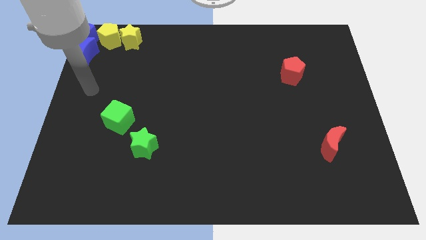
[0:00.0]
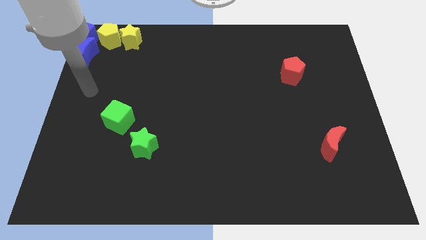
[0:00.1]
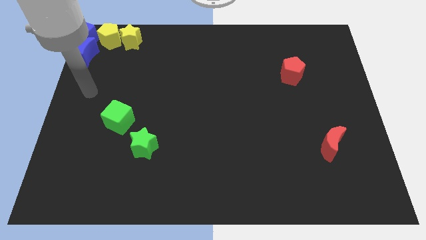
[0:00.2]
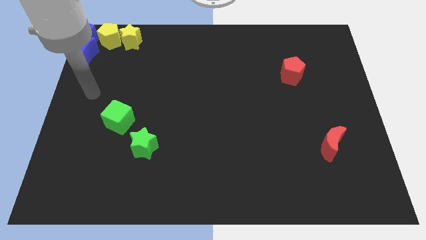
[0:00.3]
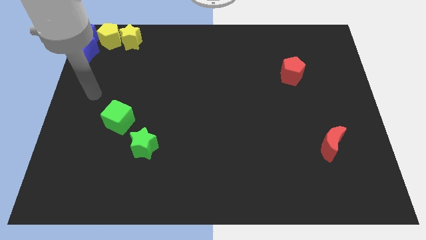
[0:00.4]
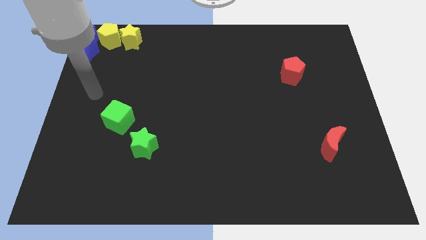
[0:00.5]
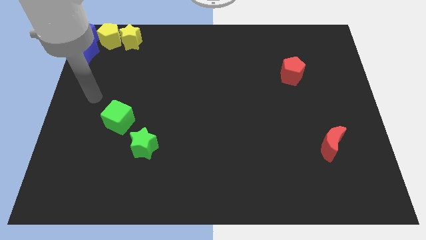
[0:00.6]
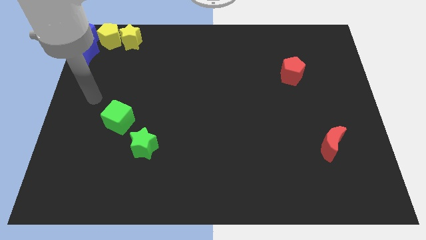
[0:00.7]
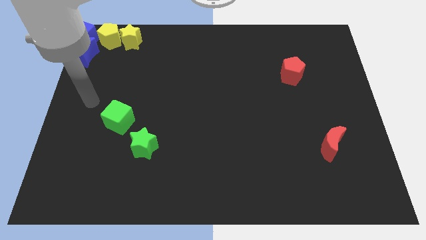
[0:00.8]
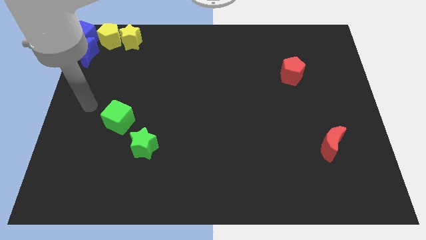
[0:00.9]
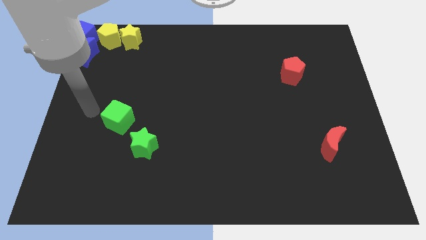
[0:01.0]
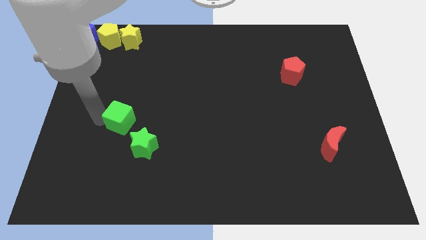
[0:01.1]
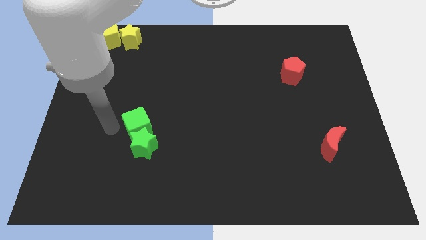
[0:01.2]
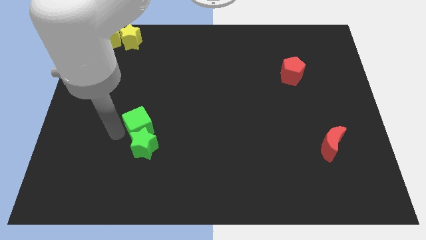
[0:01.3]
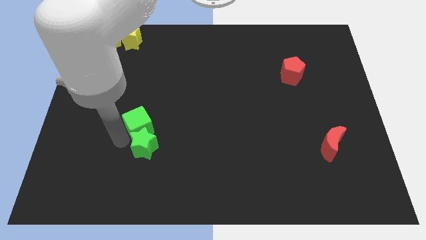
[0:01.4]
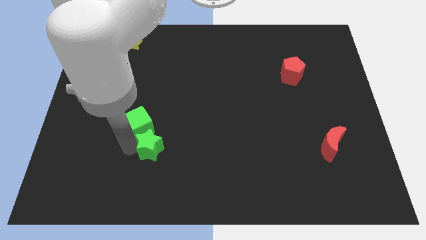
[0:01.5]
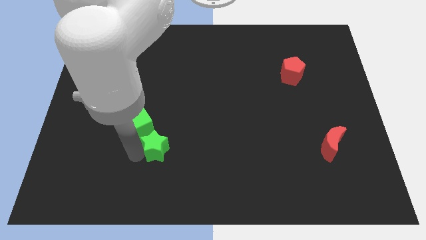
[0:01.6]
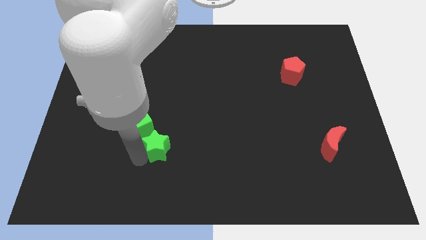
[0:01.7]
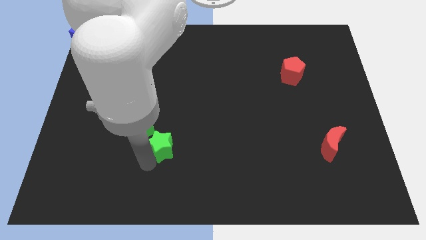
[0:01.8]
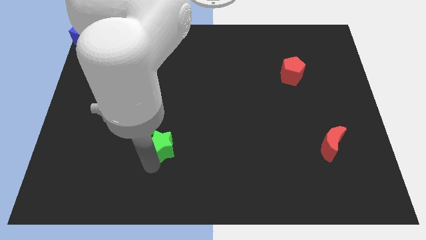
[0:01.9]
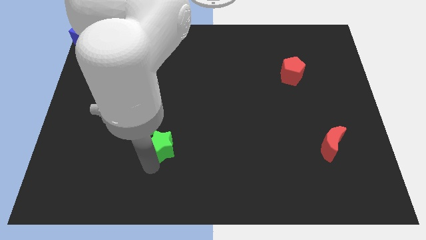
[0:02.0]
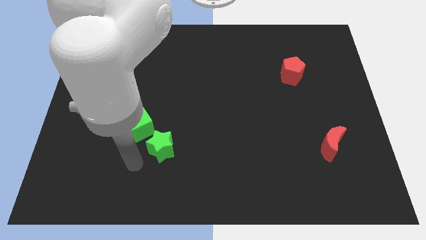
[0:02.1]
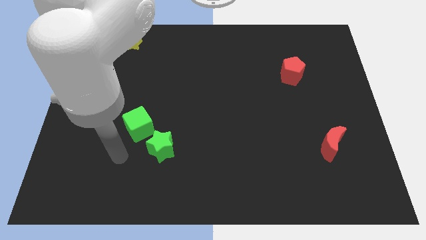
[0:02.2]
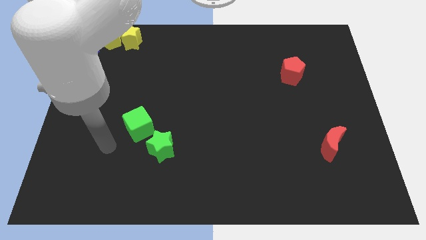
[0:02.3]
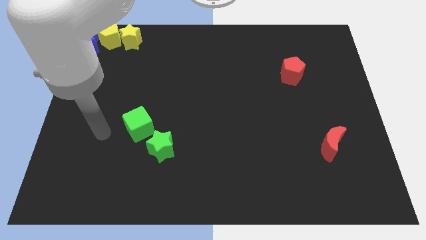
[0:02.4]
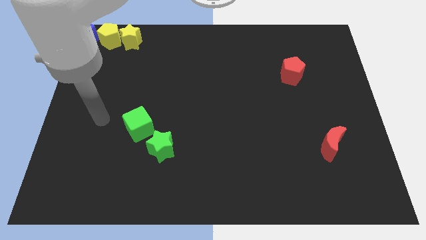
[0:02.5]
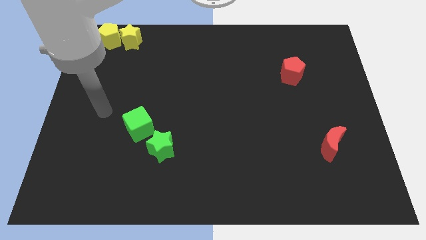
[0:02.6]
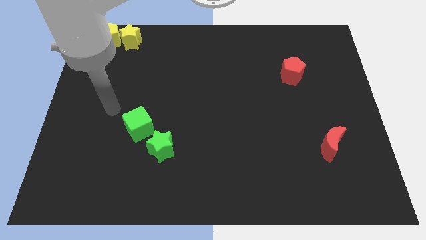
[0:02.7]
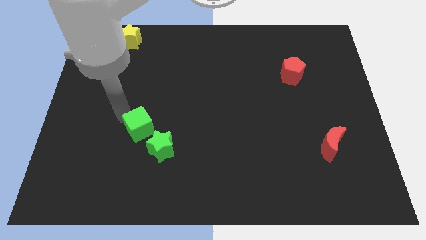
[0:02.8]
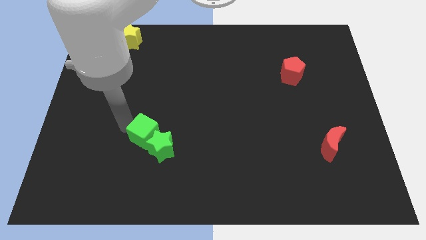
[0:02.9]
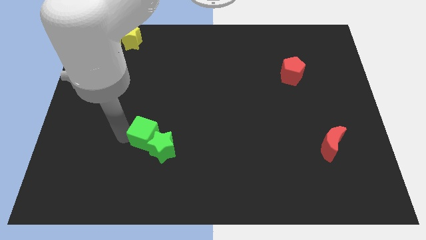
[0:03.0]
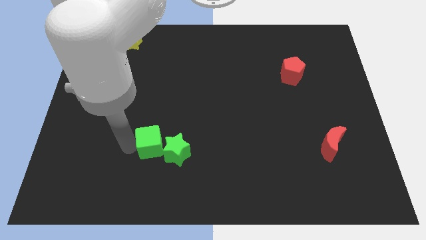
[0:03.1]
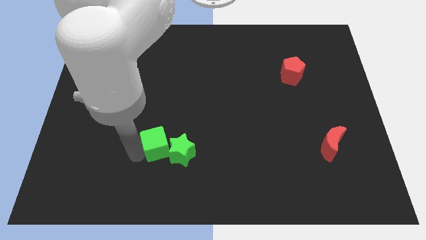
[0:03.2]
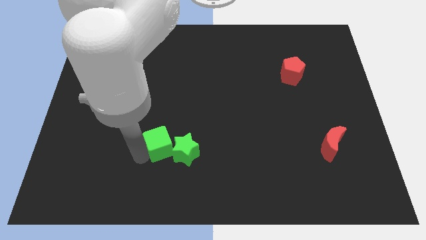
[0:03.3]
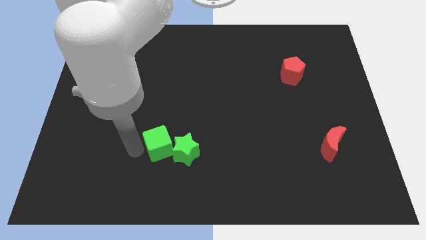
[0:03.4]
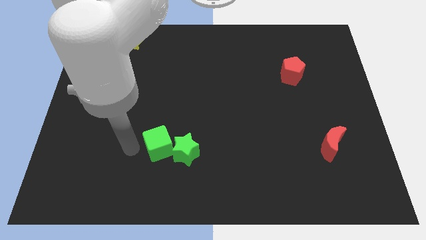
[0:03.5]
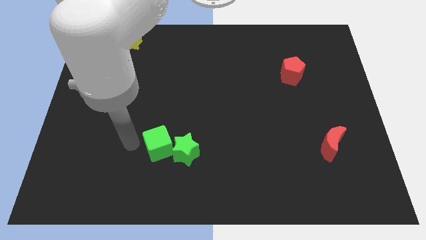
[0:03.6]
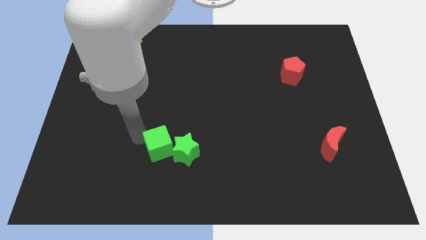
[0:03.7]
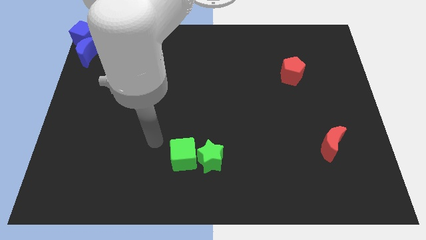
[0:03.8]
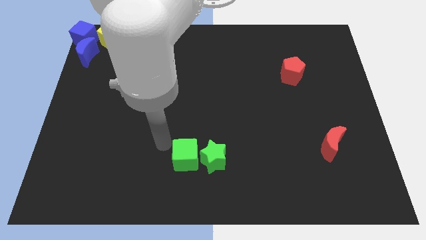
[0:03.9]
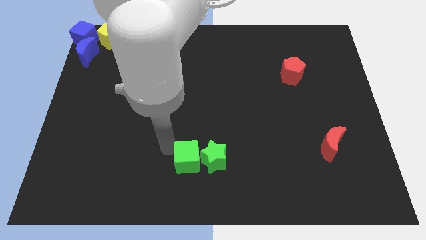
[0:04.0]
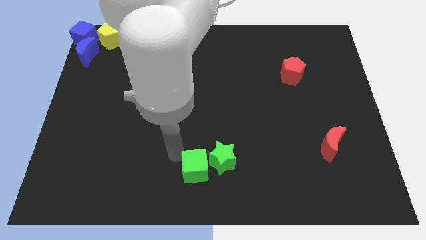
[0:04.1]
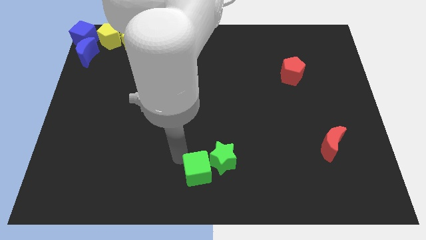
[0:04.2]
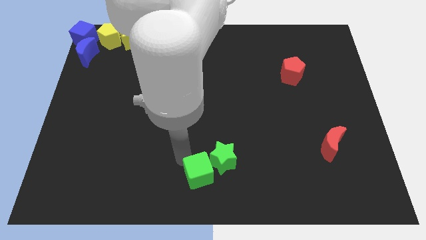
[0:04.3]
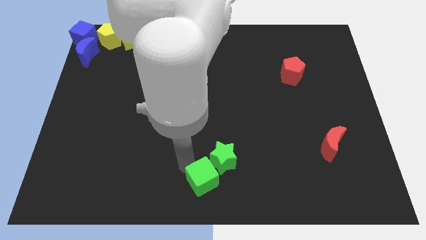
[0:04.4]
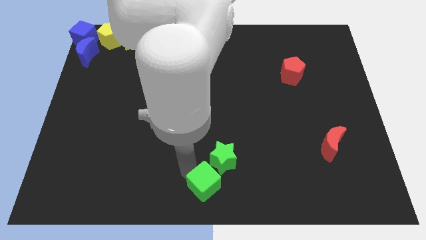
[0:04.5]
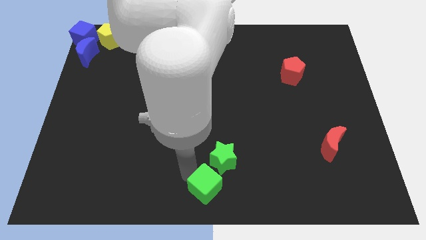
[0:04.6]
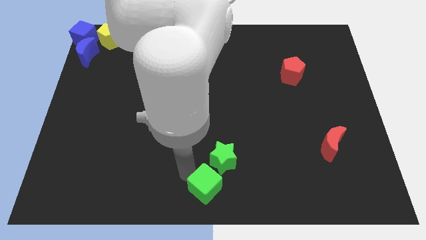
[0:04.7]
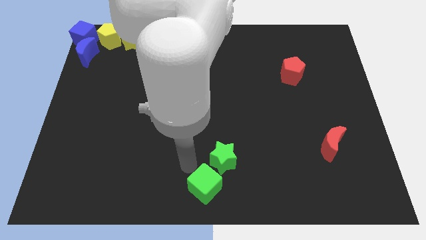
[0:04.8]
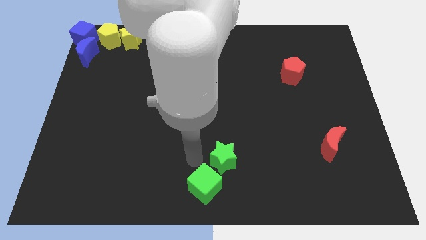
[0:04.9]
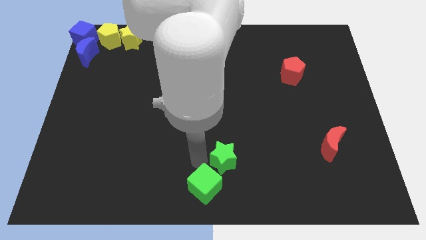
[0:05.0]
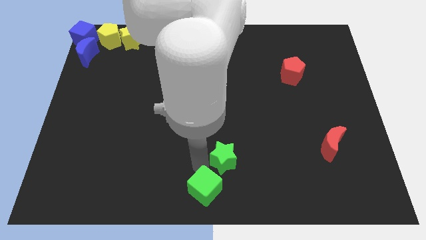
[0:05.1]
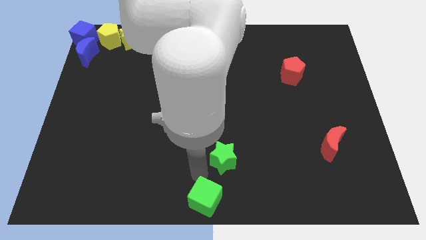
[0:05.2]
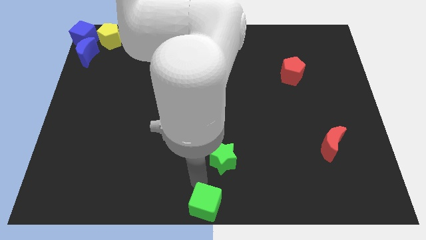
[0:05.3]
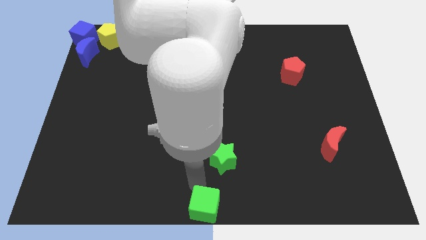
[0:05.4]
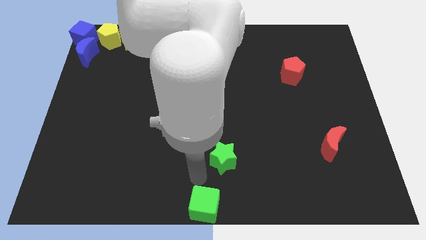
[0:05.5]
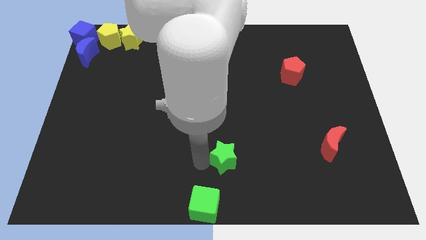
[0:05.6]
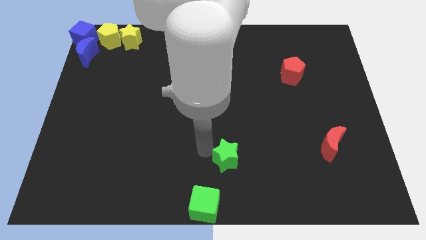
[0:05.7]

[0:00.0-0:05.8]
move the green blocks to the bottom side of the board

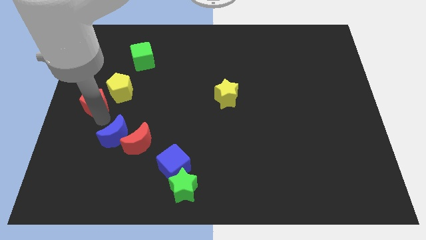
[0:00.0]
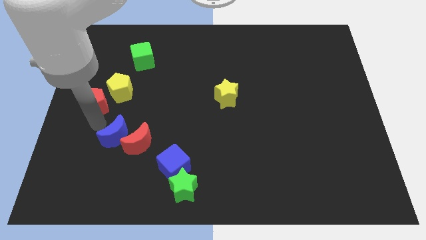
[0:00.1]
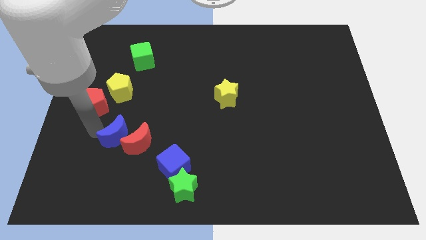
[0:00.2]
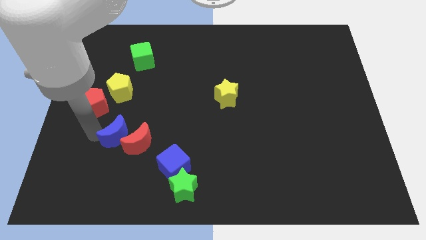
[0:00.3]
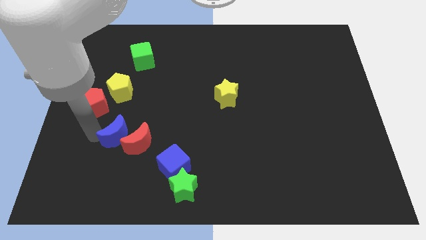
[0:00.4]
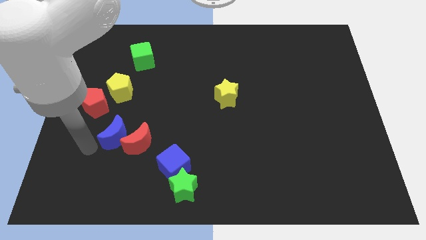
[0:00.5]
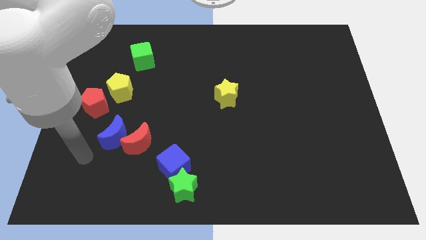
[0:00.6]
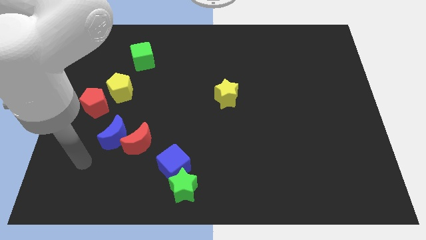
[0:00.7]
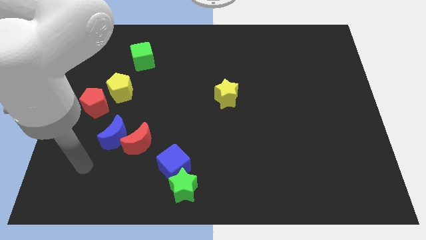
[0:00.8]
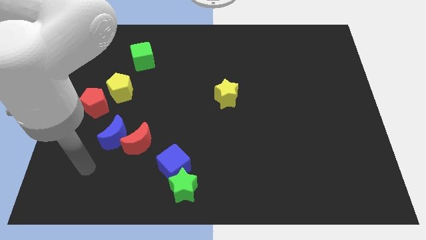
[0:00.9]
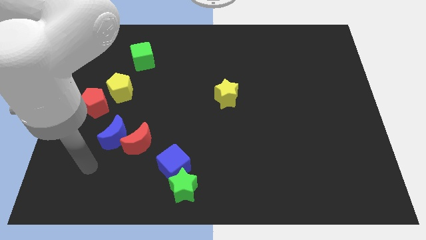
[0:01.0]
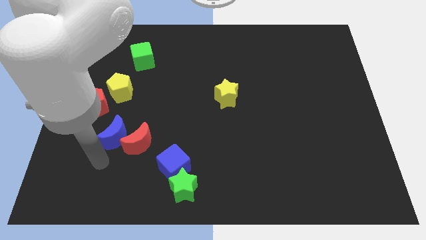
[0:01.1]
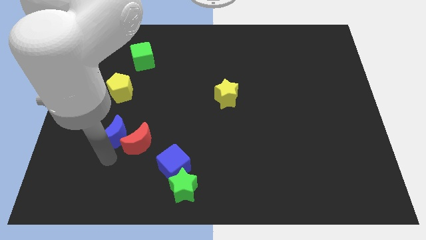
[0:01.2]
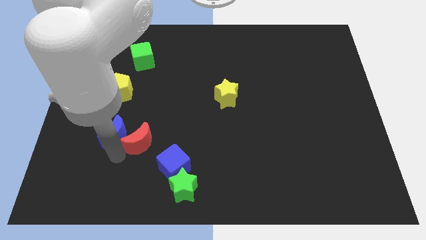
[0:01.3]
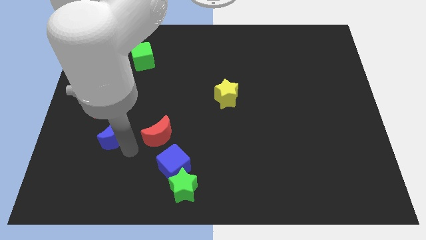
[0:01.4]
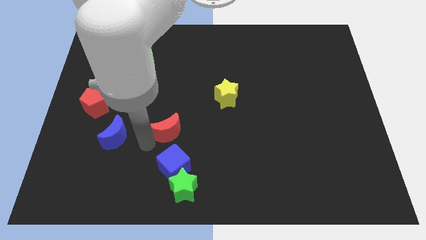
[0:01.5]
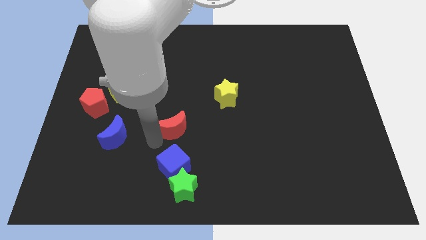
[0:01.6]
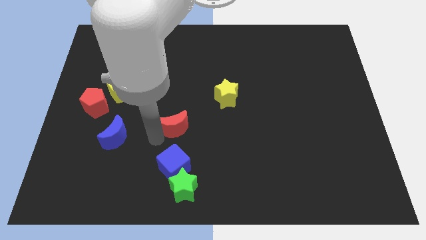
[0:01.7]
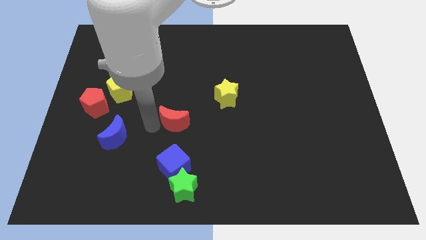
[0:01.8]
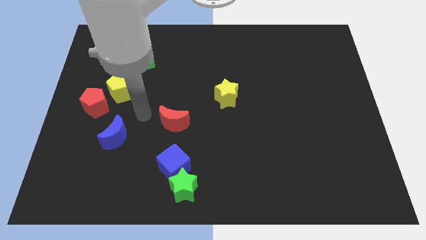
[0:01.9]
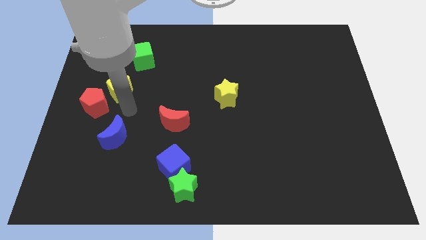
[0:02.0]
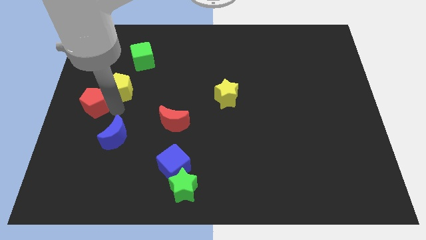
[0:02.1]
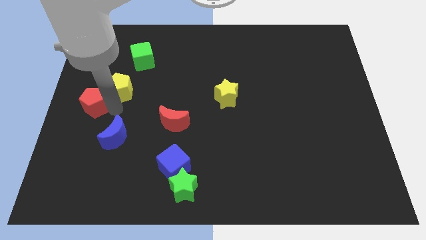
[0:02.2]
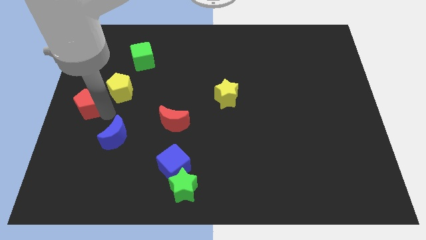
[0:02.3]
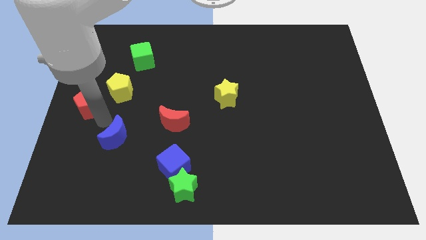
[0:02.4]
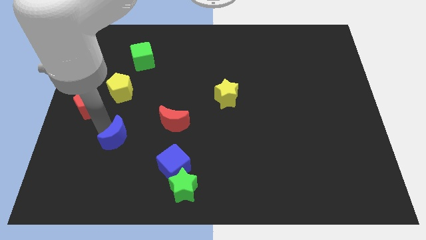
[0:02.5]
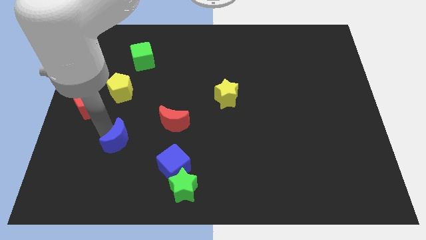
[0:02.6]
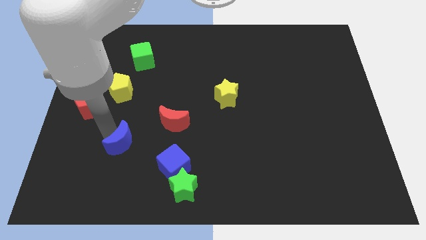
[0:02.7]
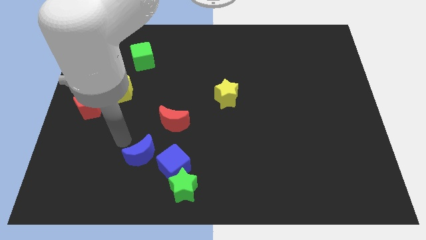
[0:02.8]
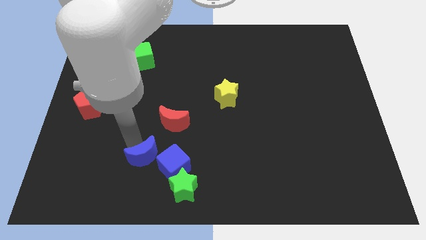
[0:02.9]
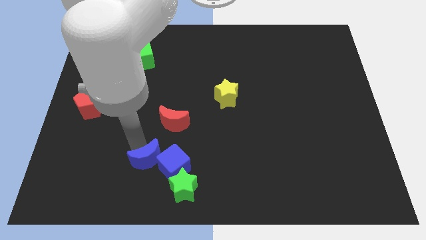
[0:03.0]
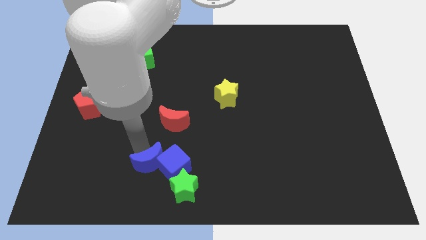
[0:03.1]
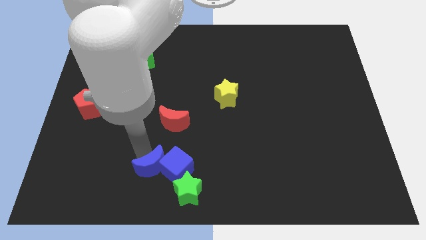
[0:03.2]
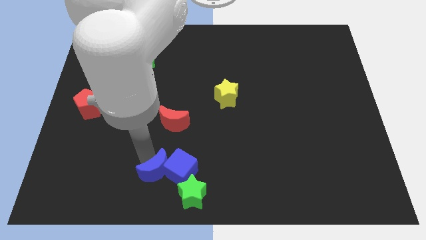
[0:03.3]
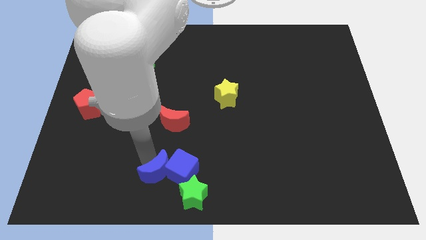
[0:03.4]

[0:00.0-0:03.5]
push the blue crescent into the blue cube
